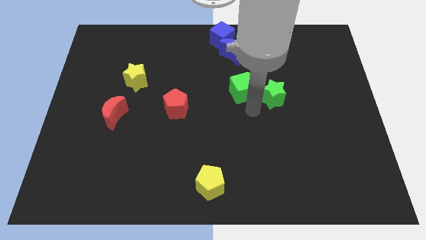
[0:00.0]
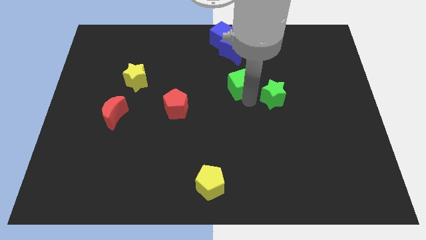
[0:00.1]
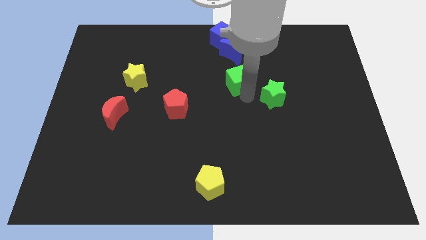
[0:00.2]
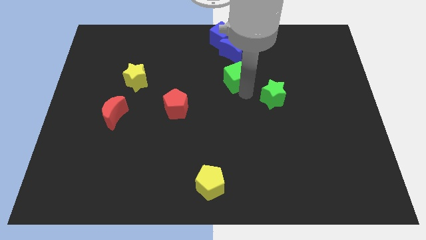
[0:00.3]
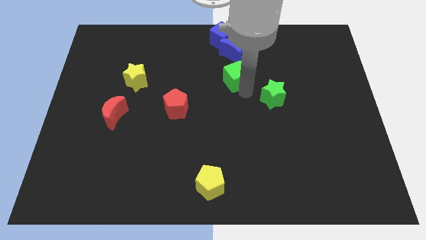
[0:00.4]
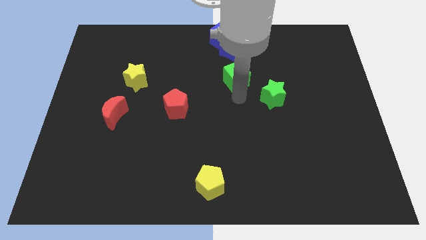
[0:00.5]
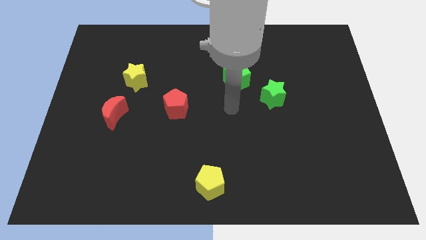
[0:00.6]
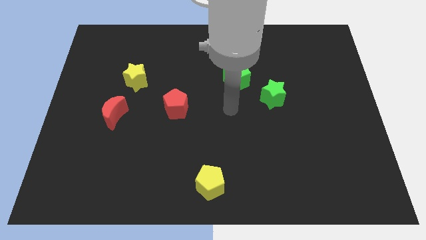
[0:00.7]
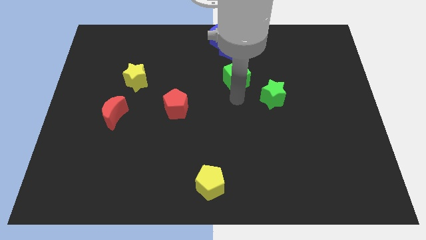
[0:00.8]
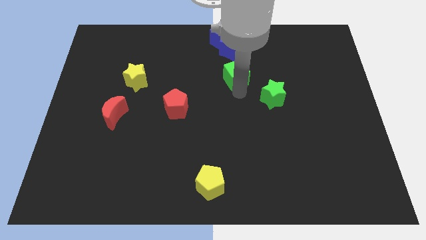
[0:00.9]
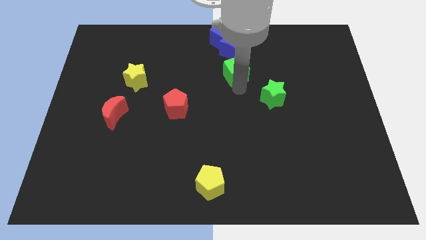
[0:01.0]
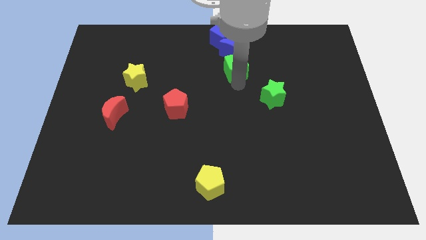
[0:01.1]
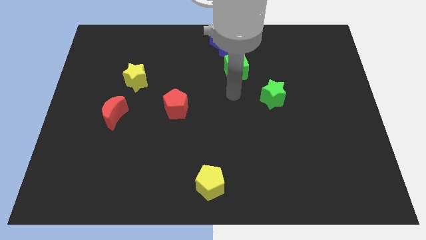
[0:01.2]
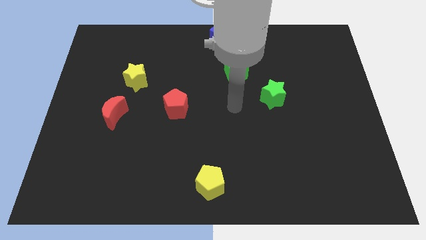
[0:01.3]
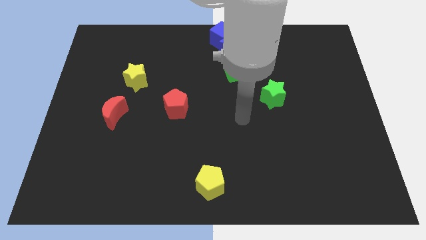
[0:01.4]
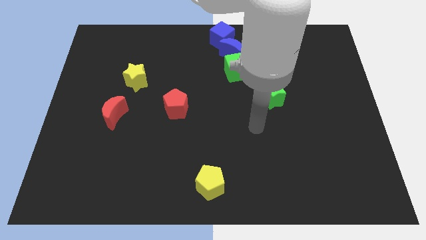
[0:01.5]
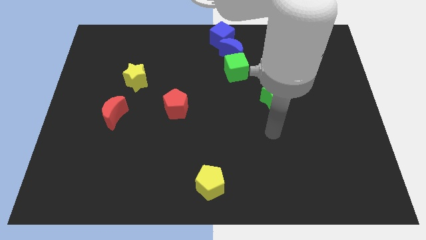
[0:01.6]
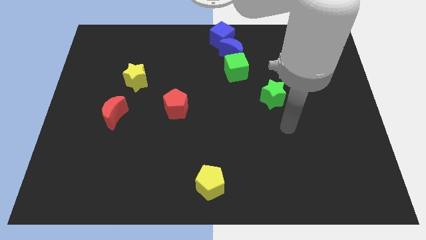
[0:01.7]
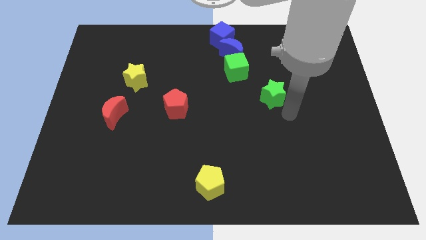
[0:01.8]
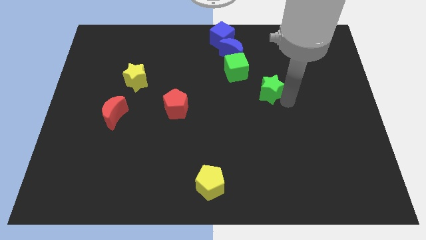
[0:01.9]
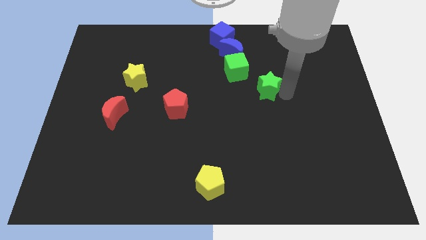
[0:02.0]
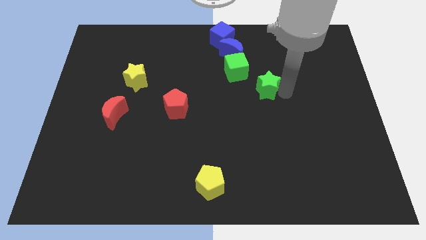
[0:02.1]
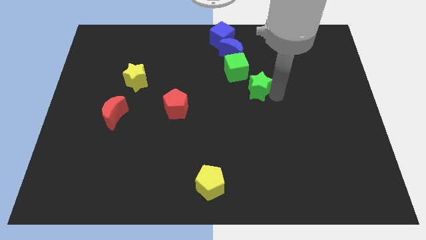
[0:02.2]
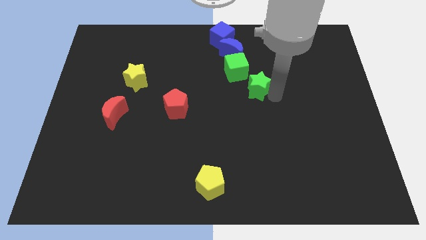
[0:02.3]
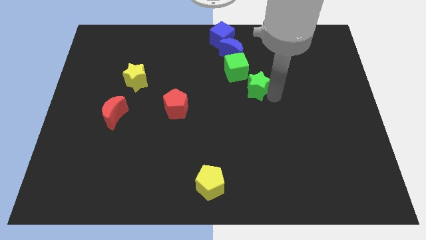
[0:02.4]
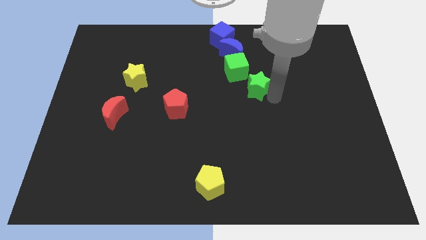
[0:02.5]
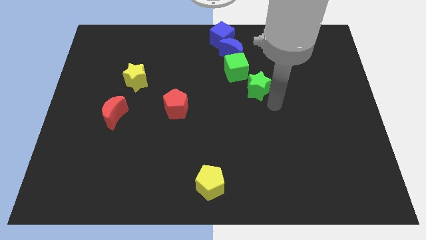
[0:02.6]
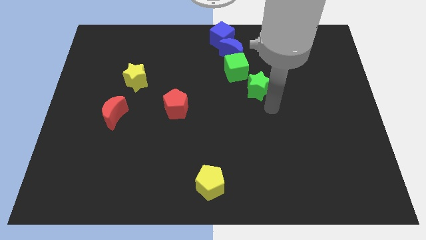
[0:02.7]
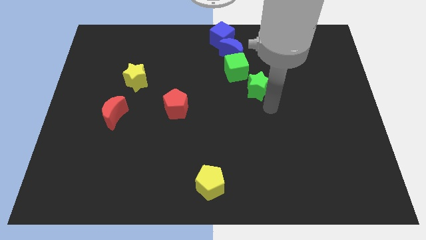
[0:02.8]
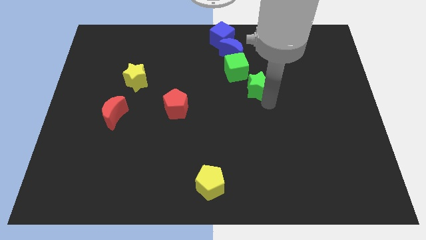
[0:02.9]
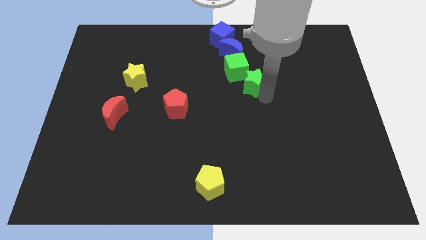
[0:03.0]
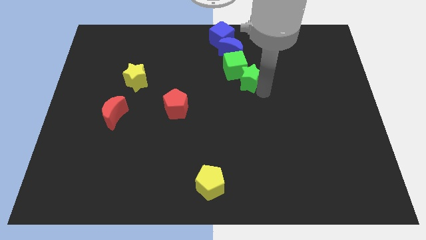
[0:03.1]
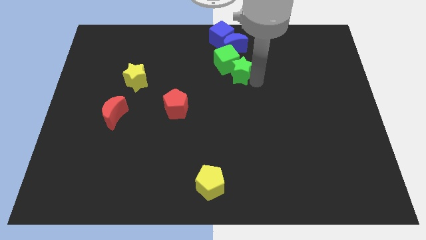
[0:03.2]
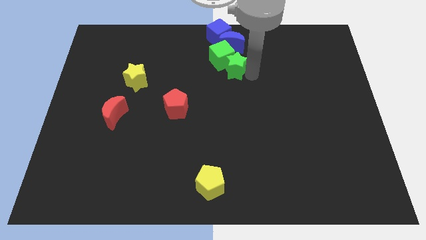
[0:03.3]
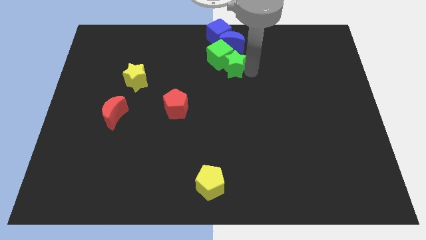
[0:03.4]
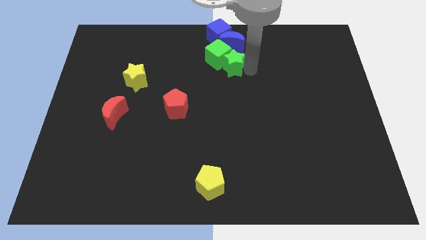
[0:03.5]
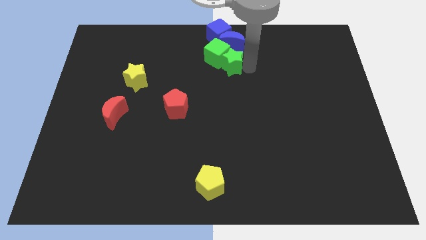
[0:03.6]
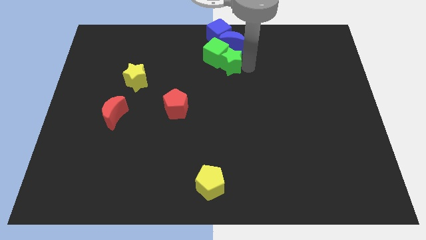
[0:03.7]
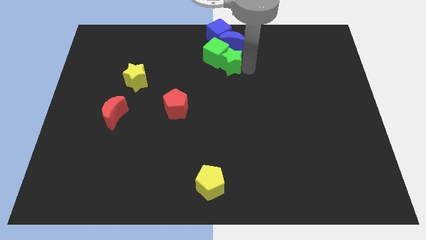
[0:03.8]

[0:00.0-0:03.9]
push the green blocks into the blue blocks

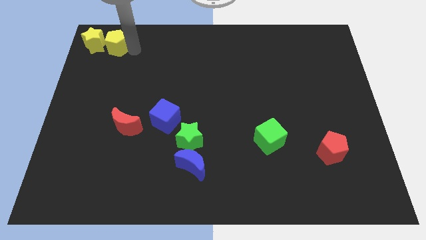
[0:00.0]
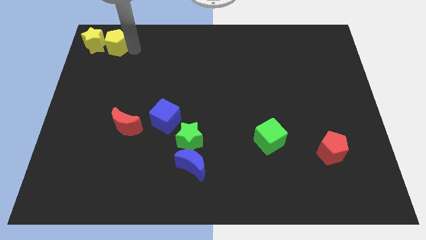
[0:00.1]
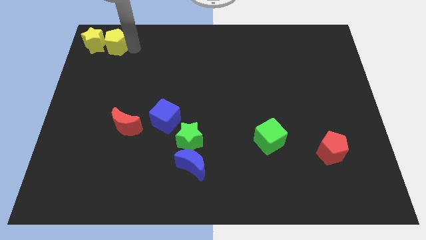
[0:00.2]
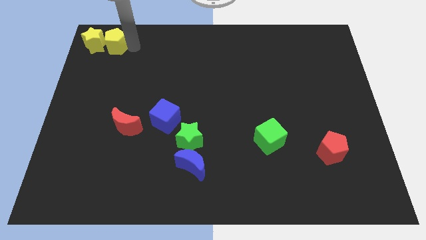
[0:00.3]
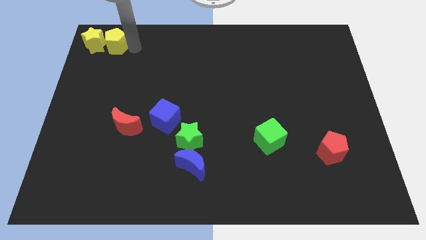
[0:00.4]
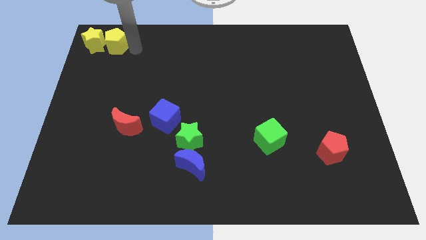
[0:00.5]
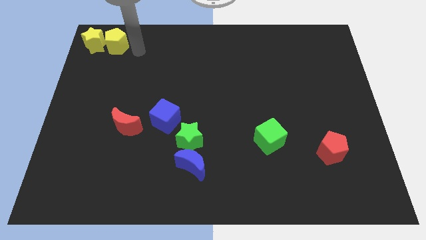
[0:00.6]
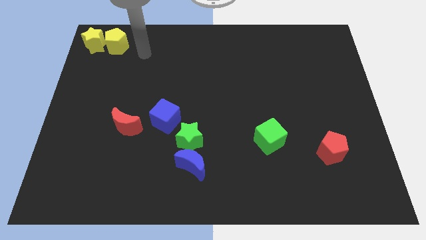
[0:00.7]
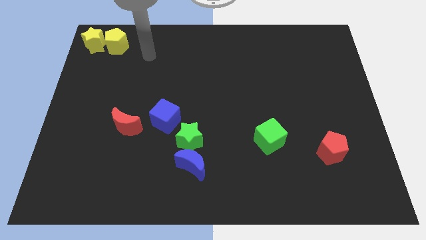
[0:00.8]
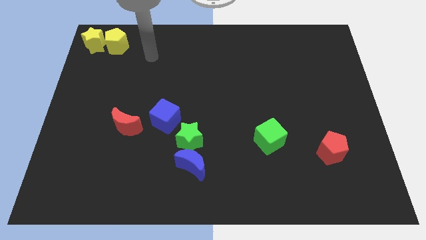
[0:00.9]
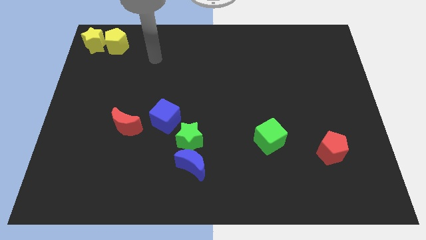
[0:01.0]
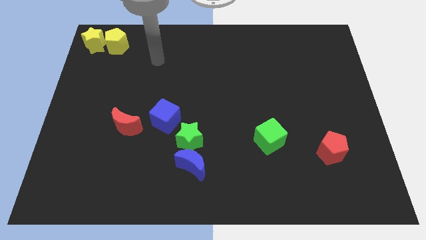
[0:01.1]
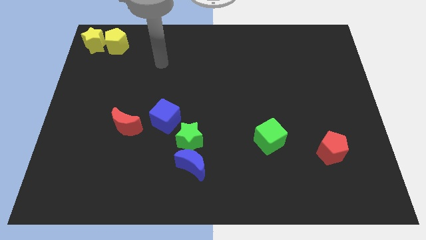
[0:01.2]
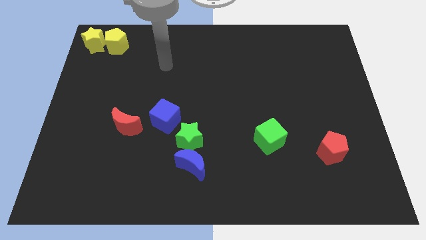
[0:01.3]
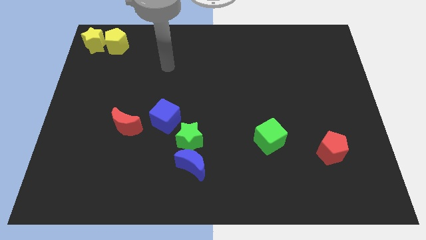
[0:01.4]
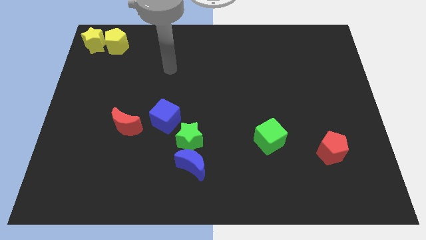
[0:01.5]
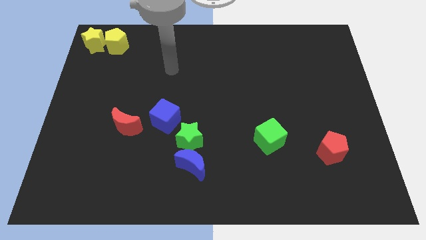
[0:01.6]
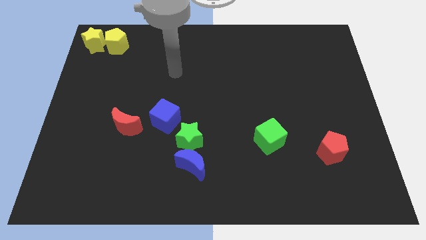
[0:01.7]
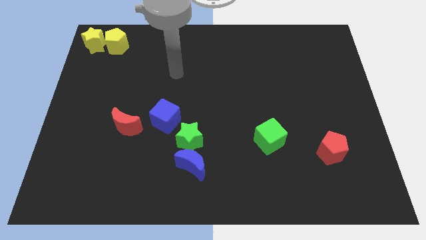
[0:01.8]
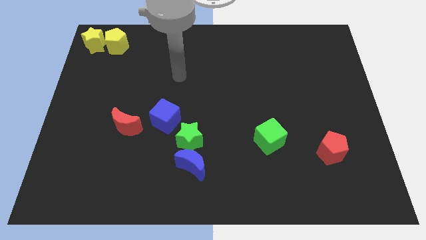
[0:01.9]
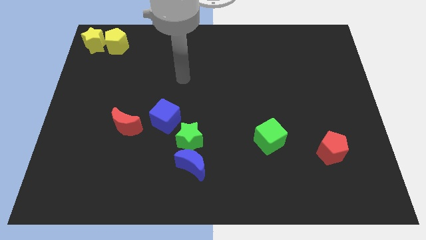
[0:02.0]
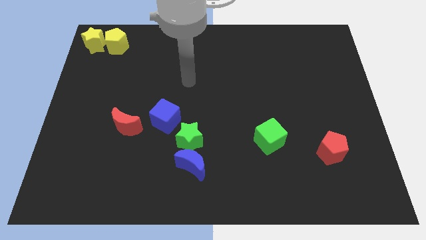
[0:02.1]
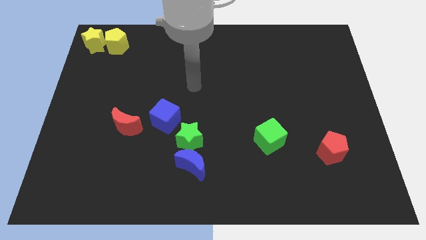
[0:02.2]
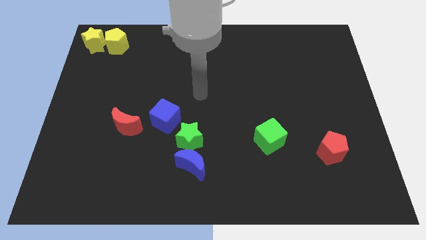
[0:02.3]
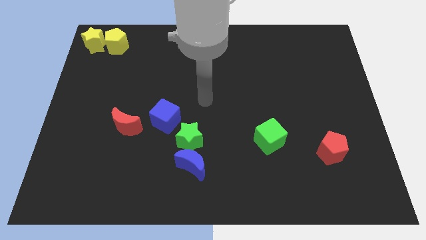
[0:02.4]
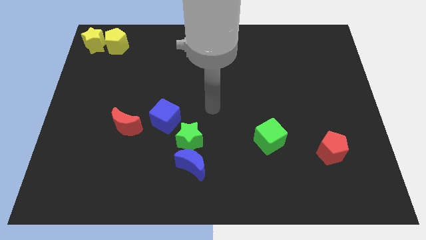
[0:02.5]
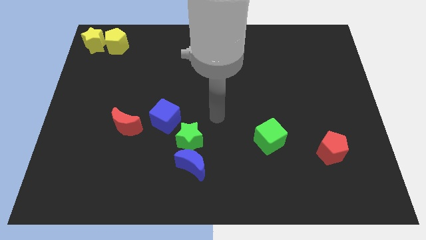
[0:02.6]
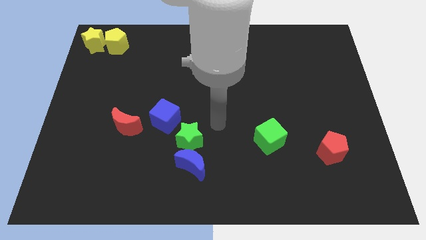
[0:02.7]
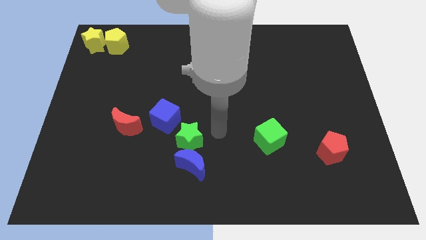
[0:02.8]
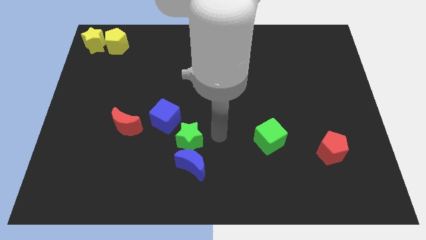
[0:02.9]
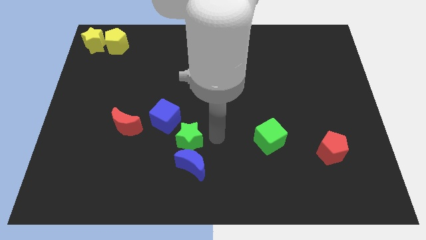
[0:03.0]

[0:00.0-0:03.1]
push your arm above to the green star

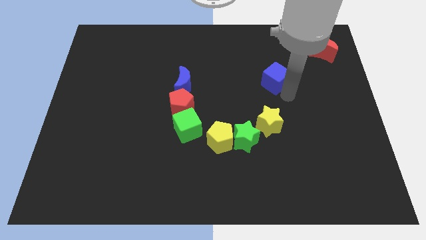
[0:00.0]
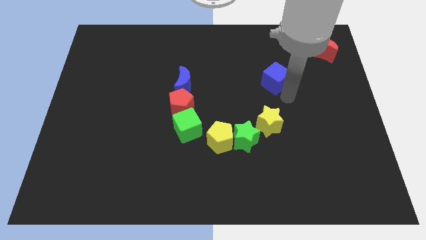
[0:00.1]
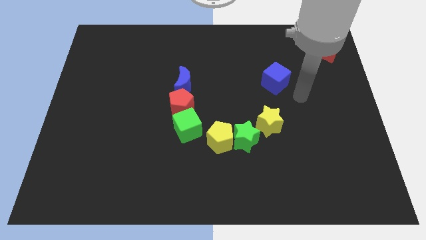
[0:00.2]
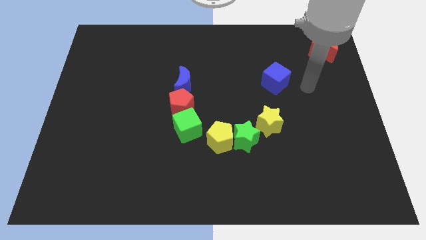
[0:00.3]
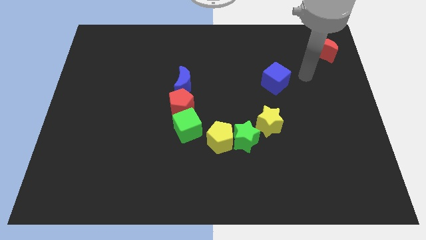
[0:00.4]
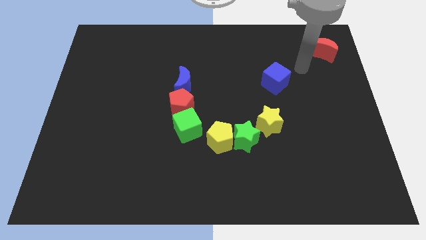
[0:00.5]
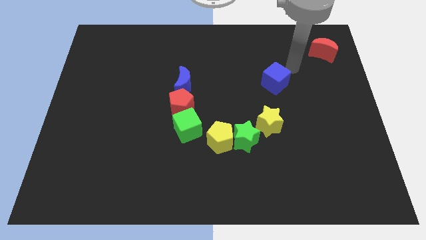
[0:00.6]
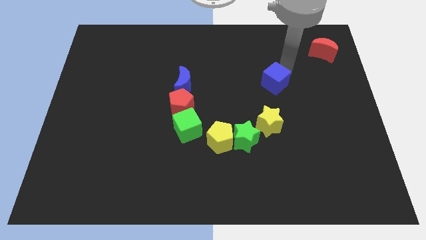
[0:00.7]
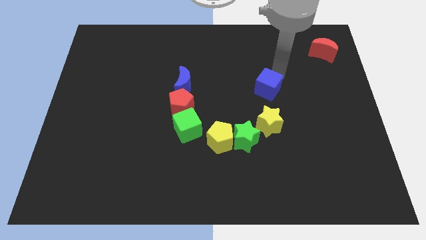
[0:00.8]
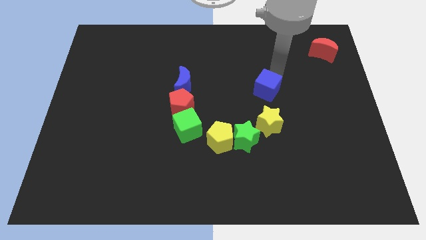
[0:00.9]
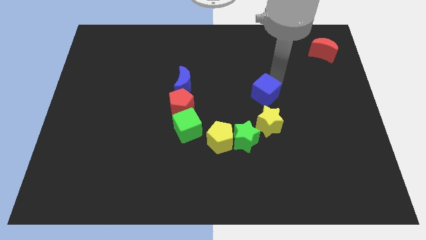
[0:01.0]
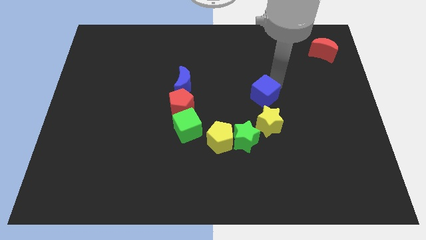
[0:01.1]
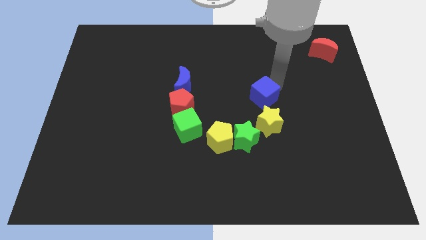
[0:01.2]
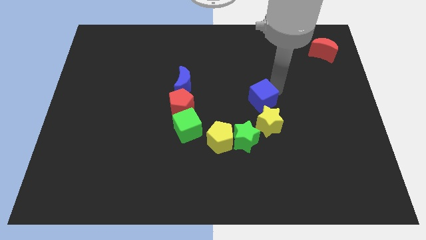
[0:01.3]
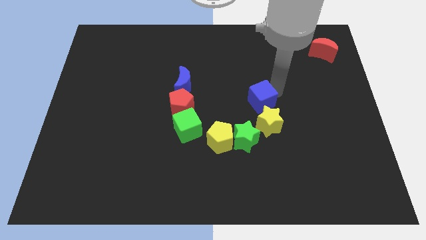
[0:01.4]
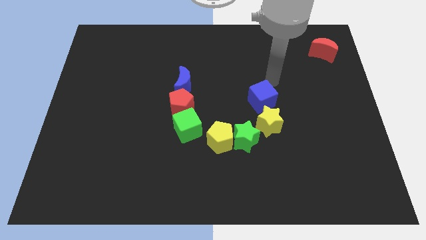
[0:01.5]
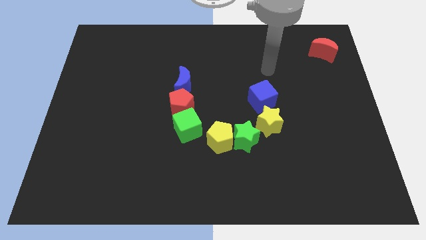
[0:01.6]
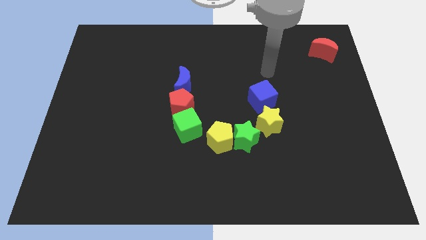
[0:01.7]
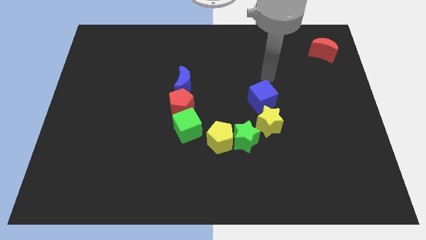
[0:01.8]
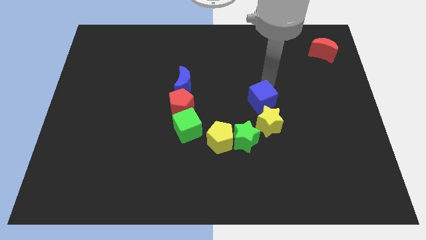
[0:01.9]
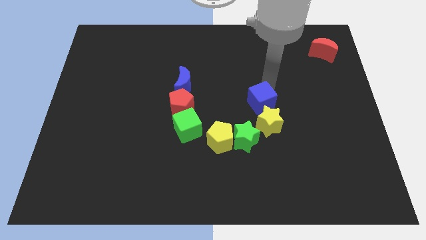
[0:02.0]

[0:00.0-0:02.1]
place blue cube on top of yellow star
